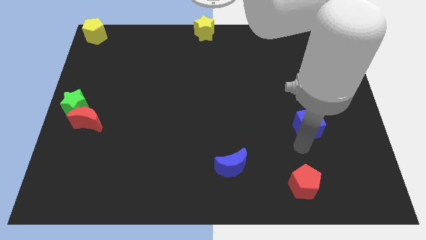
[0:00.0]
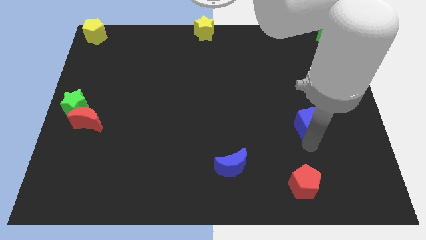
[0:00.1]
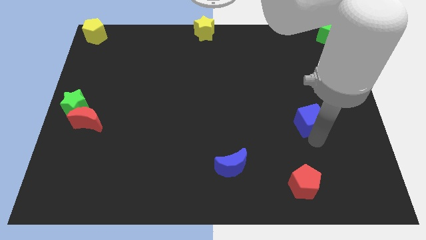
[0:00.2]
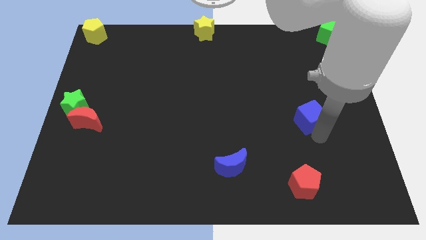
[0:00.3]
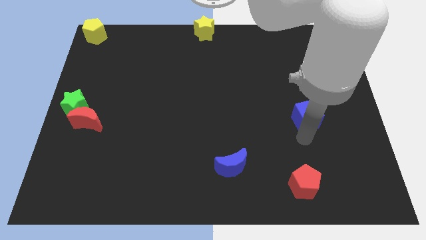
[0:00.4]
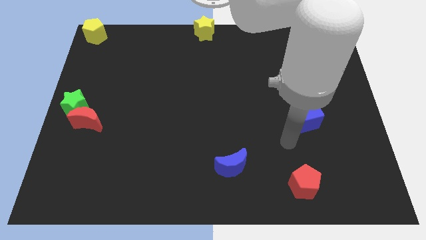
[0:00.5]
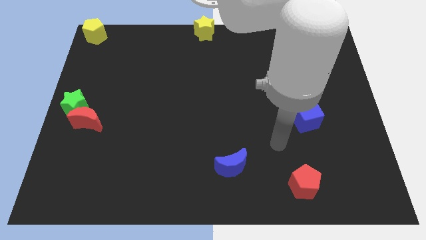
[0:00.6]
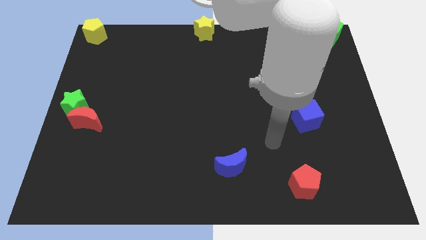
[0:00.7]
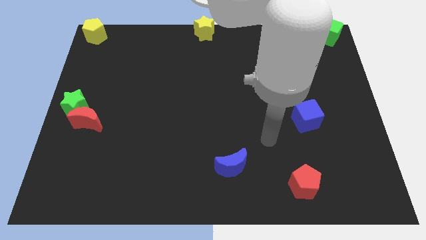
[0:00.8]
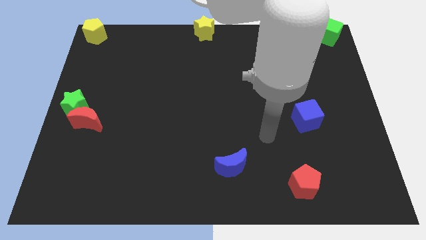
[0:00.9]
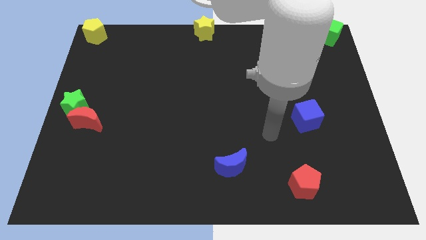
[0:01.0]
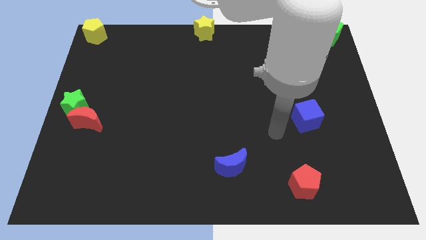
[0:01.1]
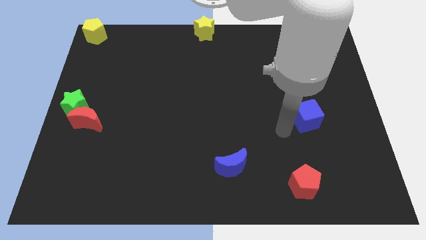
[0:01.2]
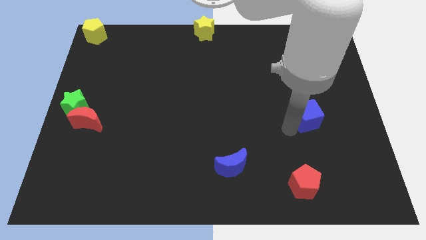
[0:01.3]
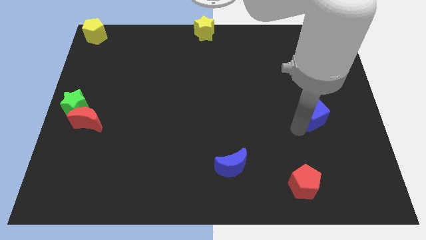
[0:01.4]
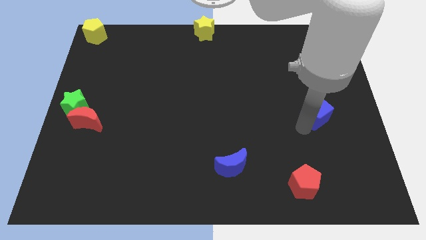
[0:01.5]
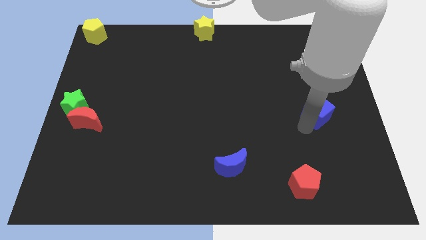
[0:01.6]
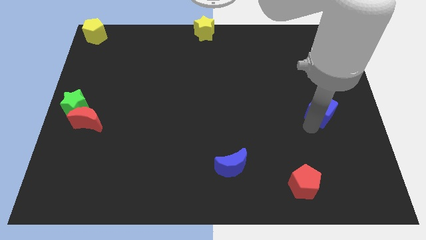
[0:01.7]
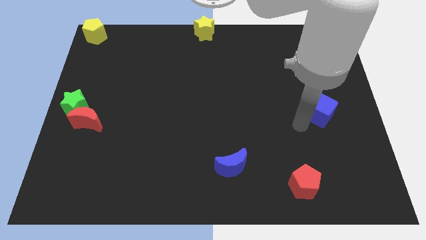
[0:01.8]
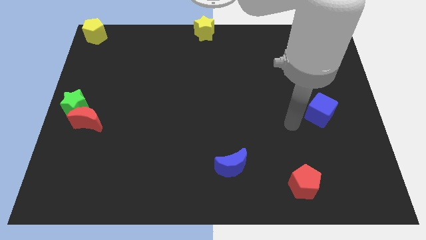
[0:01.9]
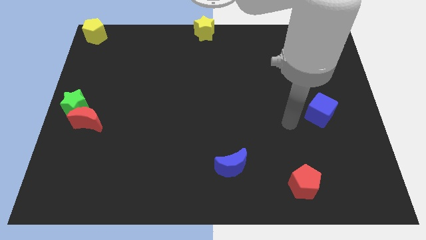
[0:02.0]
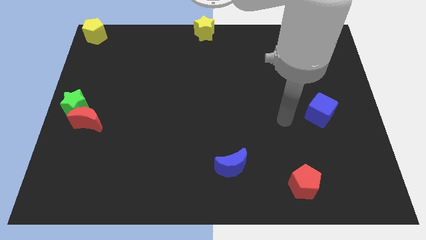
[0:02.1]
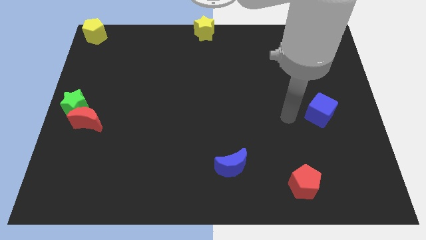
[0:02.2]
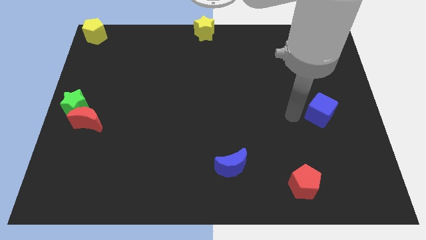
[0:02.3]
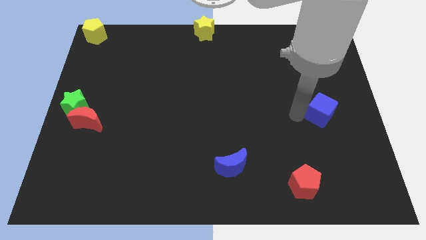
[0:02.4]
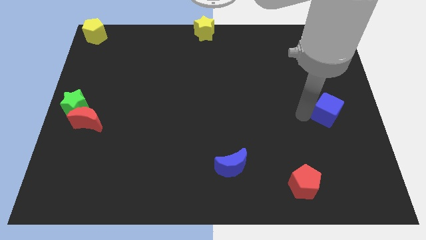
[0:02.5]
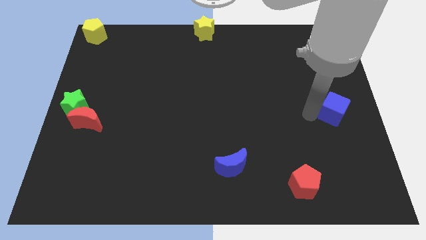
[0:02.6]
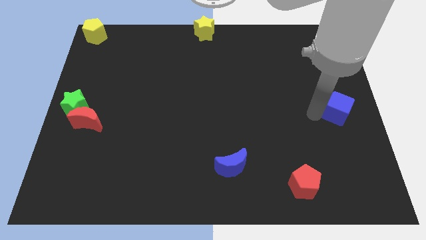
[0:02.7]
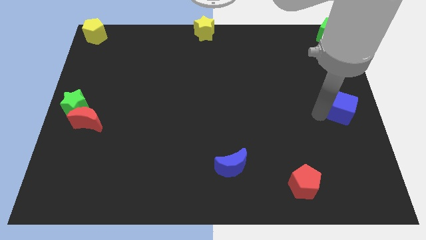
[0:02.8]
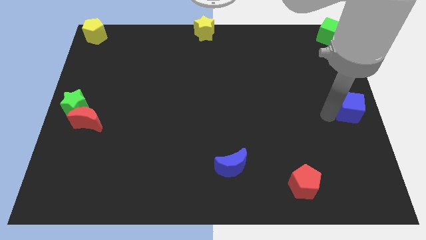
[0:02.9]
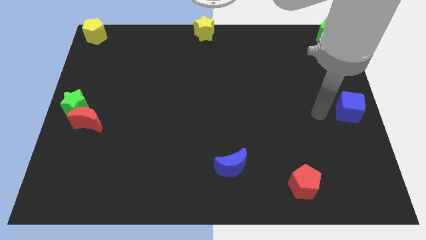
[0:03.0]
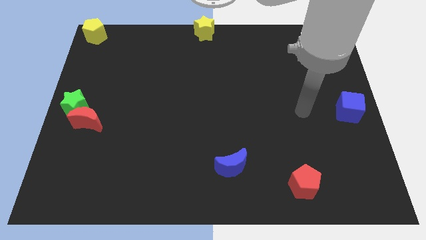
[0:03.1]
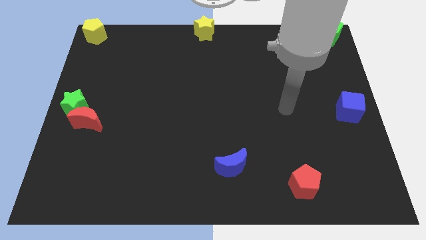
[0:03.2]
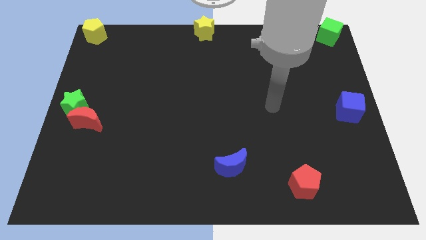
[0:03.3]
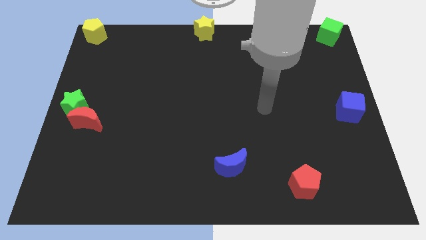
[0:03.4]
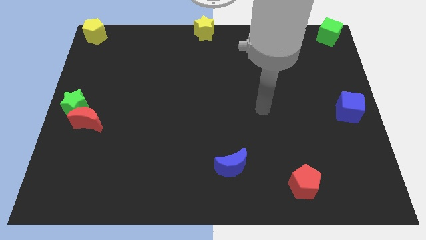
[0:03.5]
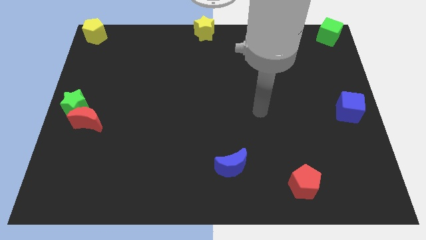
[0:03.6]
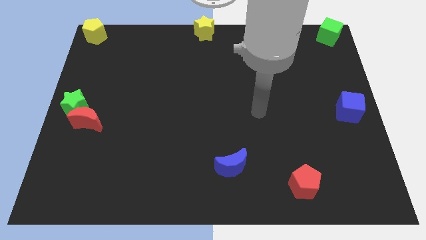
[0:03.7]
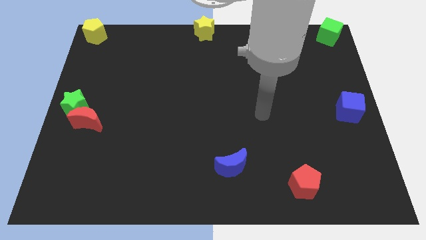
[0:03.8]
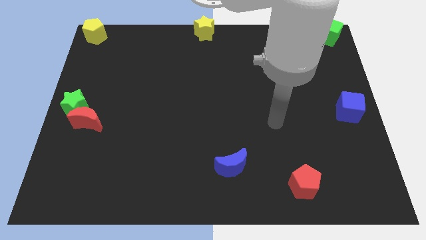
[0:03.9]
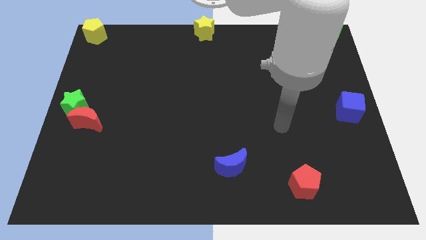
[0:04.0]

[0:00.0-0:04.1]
place the blue cube to the right side middle corner of the board

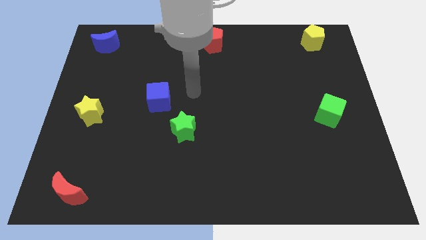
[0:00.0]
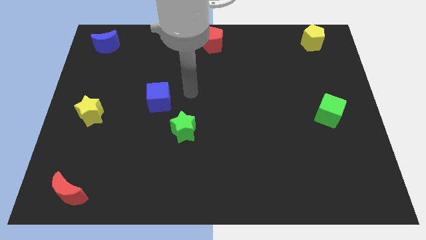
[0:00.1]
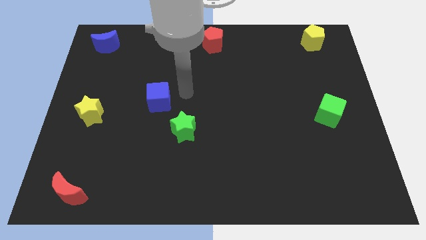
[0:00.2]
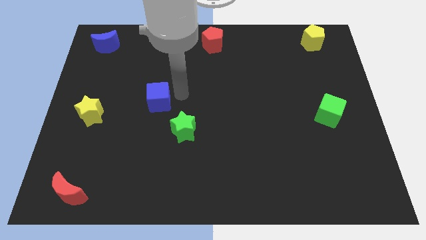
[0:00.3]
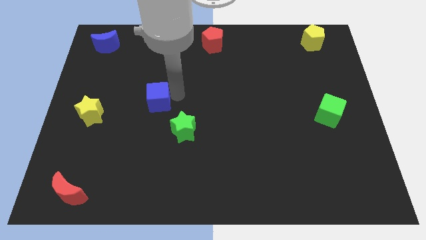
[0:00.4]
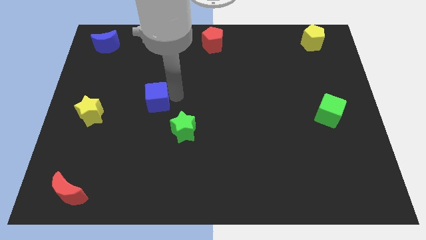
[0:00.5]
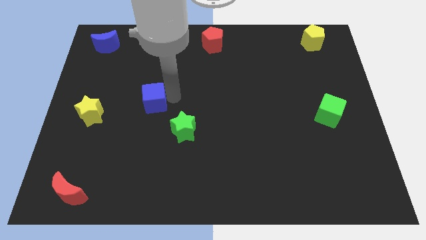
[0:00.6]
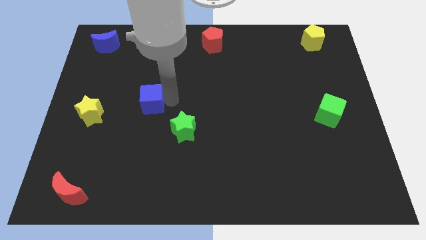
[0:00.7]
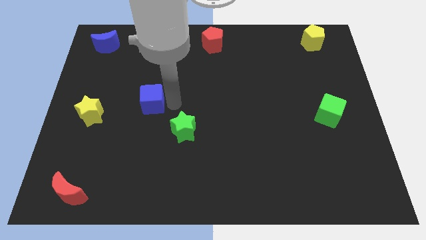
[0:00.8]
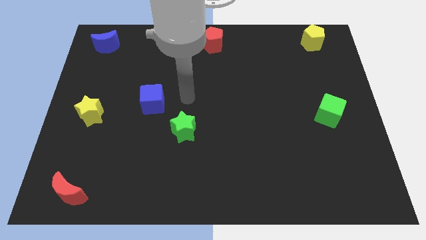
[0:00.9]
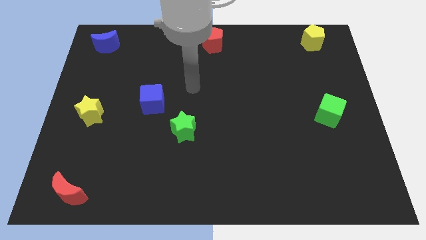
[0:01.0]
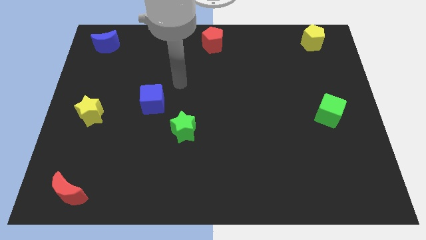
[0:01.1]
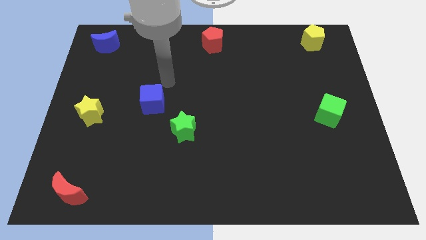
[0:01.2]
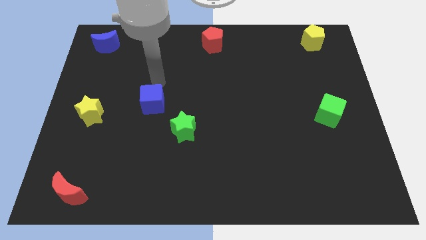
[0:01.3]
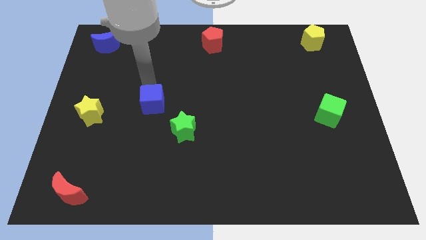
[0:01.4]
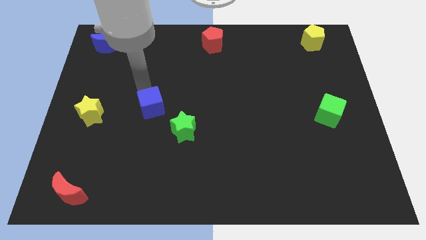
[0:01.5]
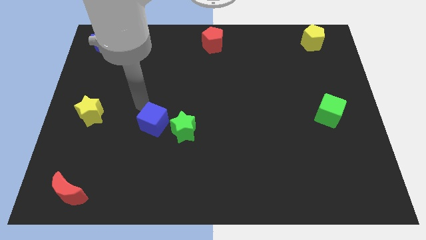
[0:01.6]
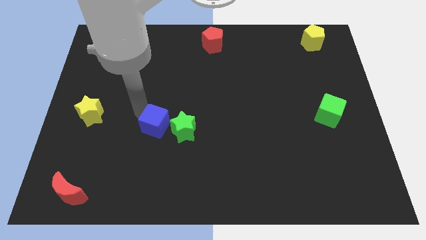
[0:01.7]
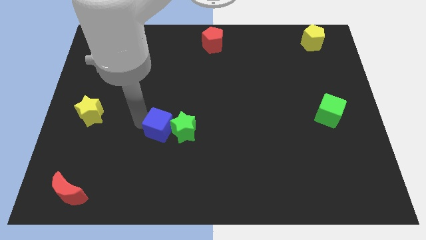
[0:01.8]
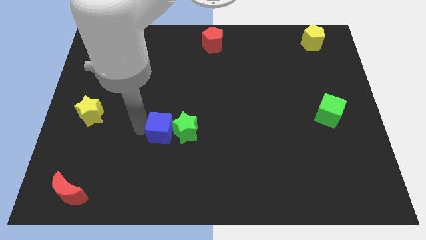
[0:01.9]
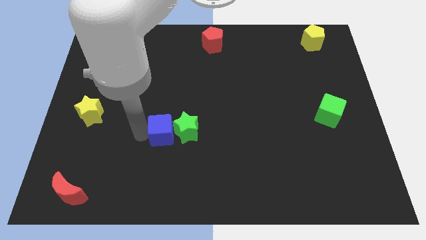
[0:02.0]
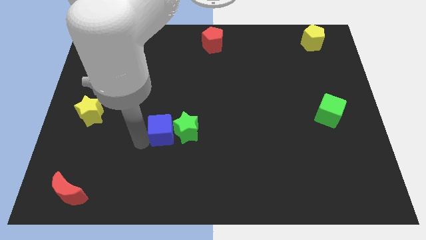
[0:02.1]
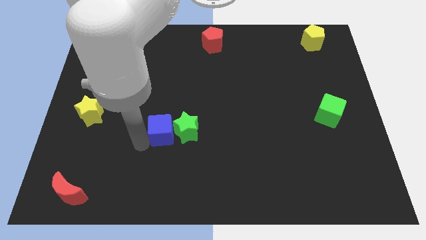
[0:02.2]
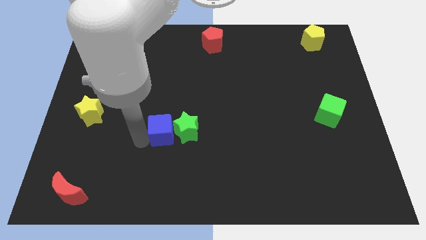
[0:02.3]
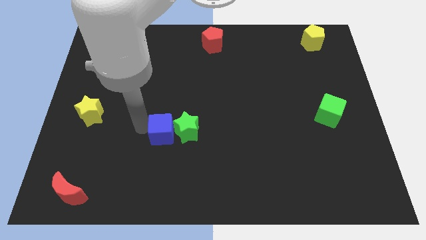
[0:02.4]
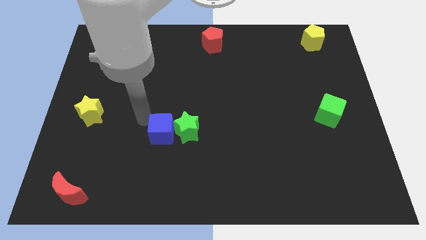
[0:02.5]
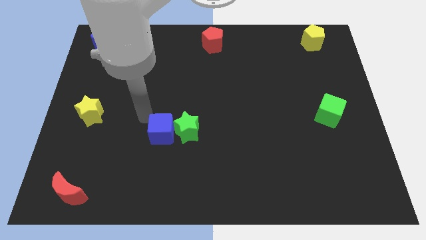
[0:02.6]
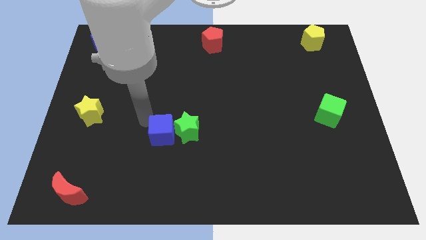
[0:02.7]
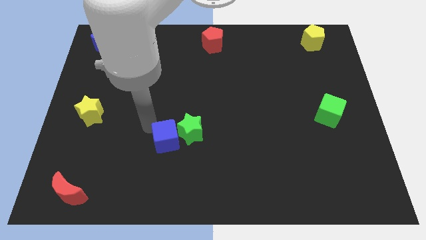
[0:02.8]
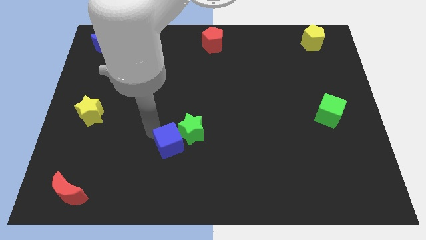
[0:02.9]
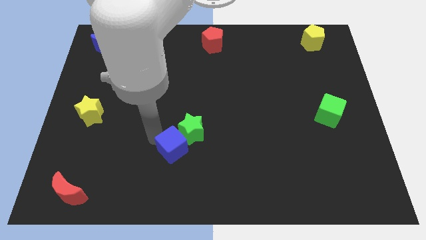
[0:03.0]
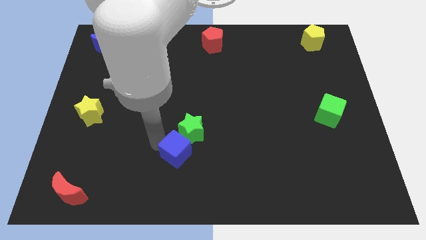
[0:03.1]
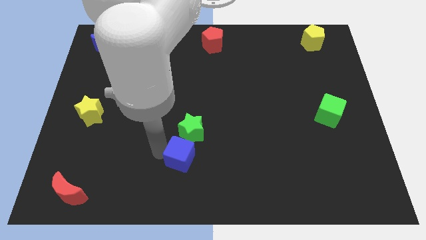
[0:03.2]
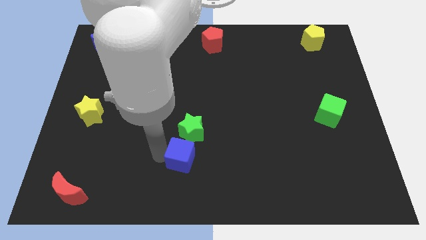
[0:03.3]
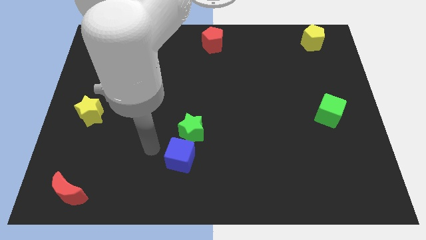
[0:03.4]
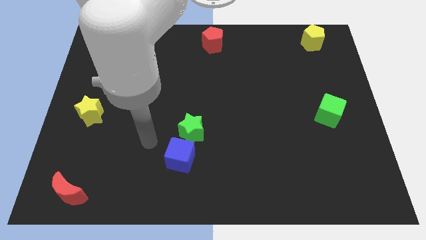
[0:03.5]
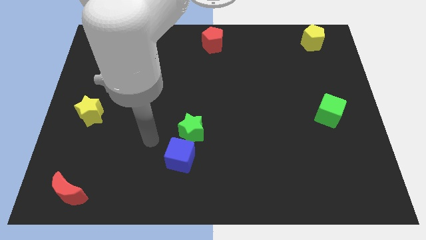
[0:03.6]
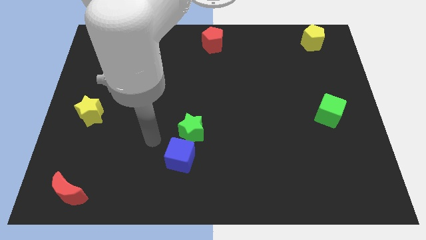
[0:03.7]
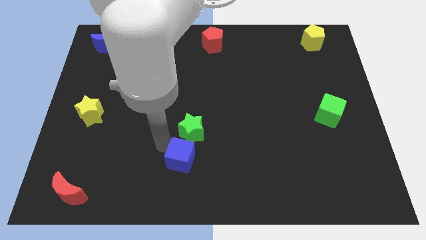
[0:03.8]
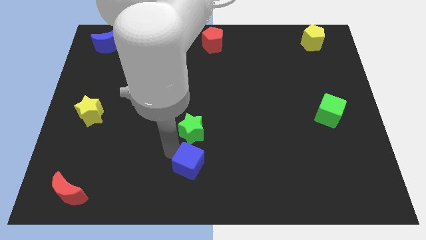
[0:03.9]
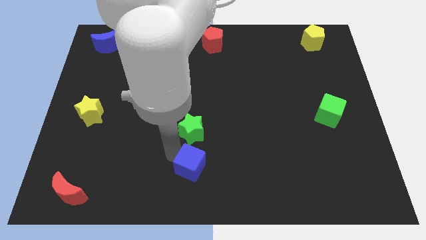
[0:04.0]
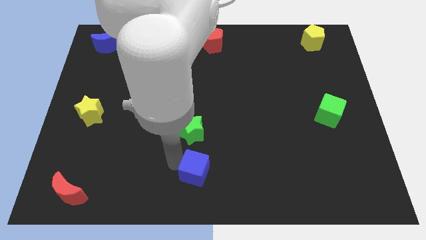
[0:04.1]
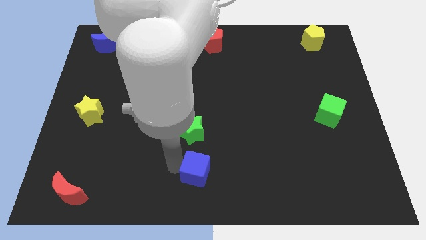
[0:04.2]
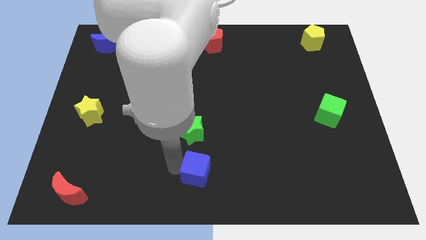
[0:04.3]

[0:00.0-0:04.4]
move the blue cube to the bottom side of the green star

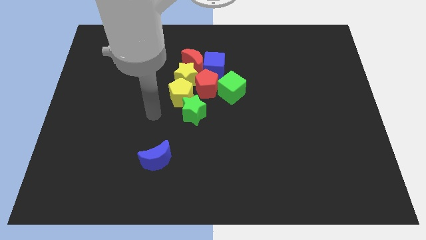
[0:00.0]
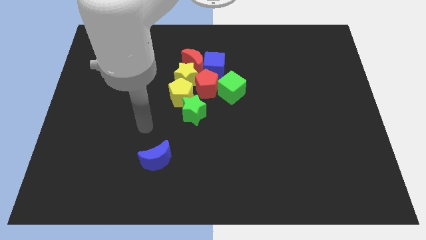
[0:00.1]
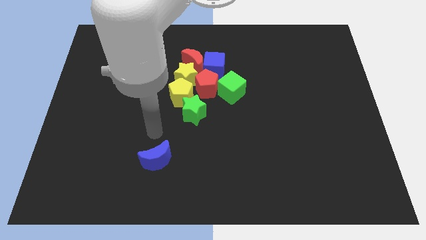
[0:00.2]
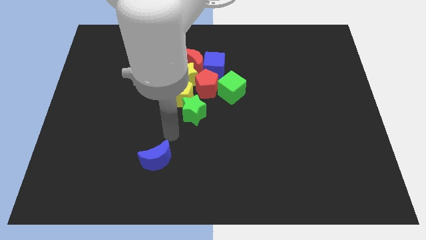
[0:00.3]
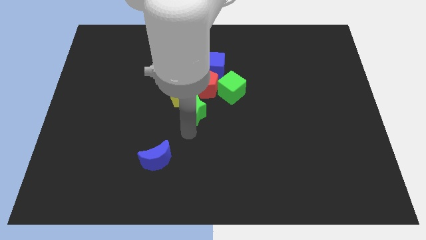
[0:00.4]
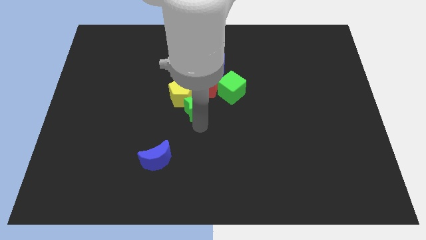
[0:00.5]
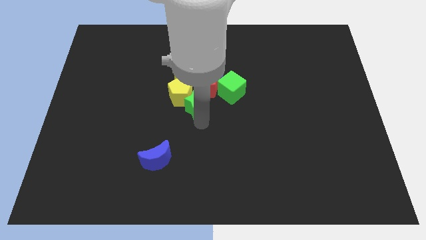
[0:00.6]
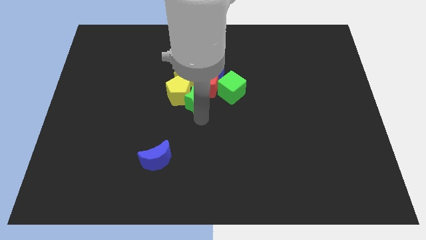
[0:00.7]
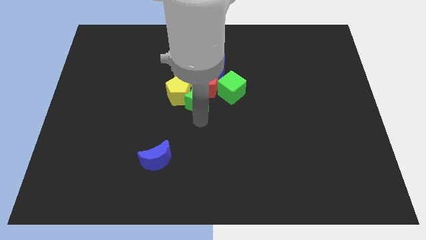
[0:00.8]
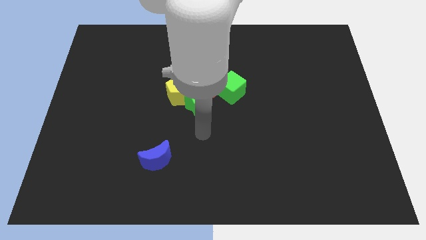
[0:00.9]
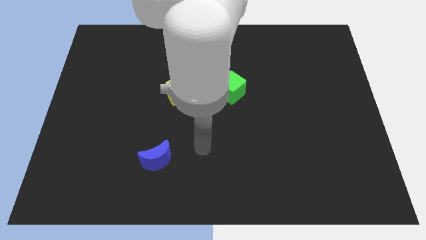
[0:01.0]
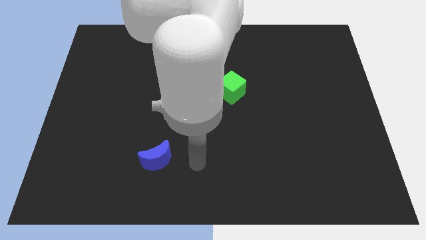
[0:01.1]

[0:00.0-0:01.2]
drag green star into the group of blocks
